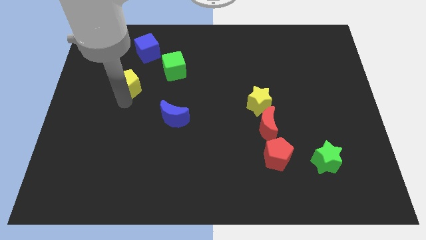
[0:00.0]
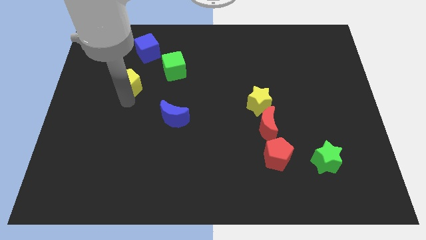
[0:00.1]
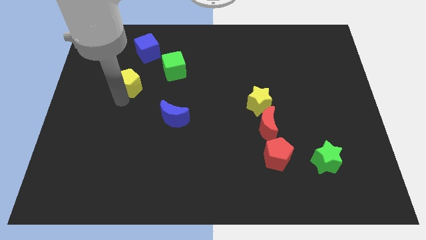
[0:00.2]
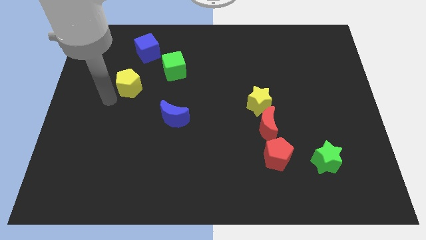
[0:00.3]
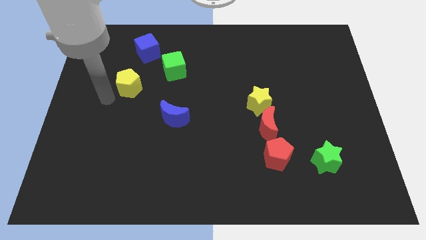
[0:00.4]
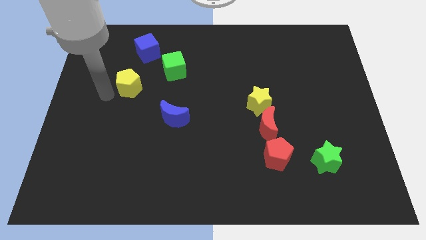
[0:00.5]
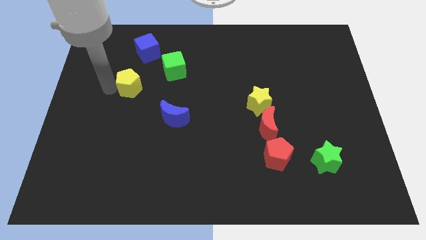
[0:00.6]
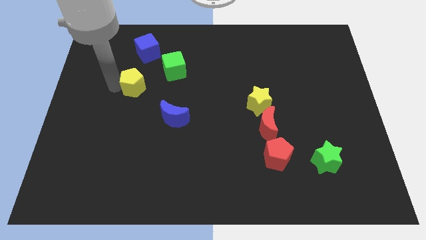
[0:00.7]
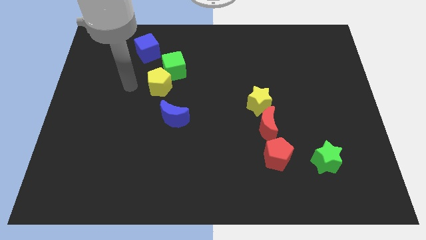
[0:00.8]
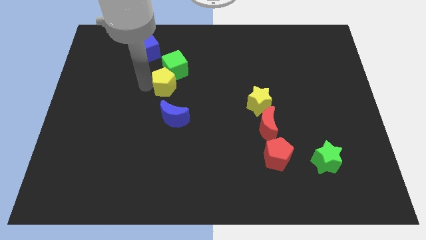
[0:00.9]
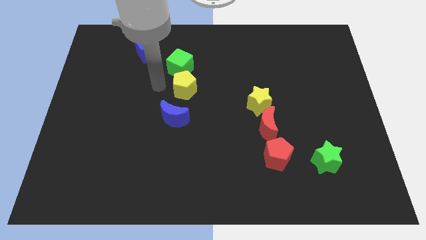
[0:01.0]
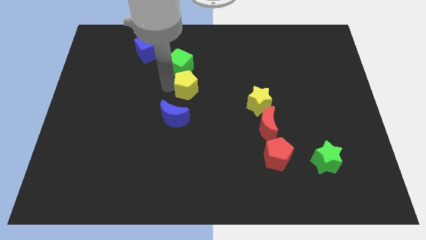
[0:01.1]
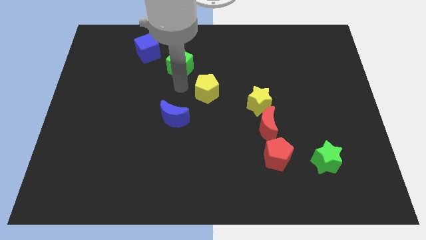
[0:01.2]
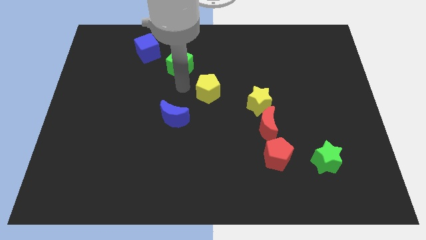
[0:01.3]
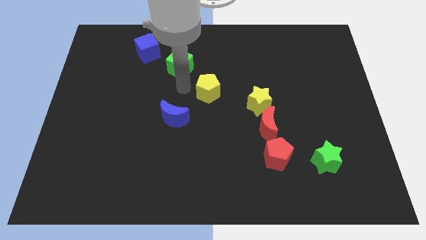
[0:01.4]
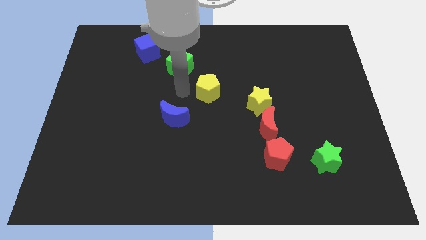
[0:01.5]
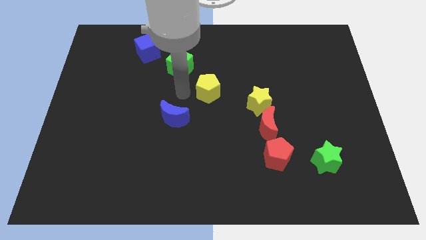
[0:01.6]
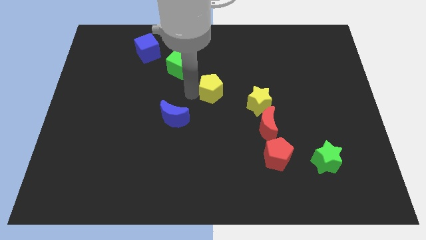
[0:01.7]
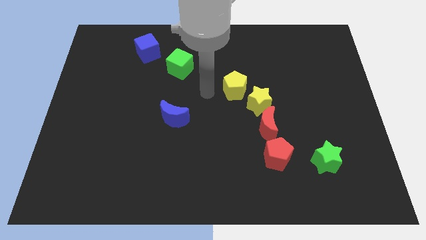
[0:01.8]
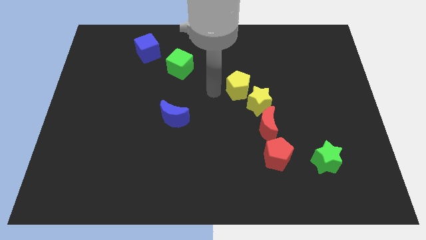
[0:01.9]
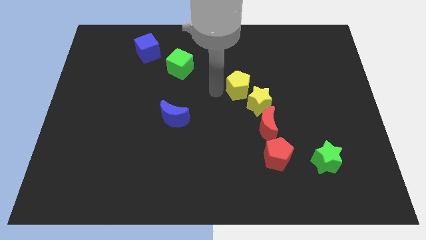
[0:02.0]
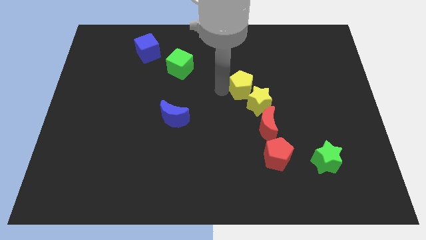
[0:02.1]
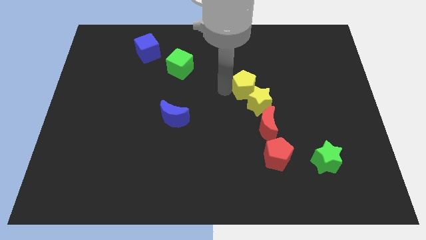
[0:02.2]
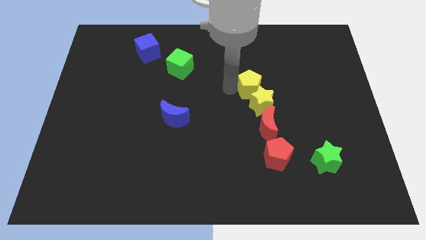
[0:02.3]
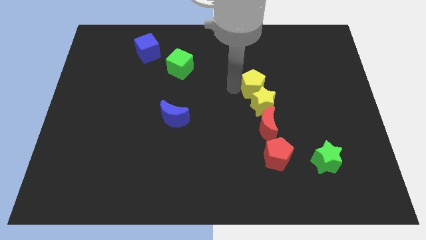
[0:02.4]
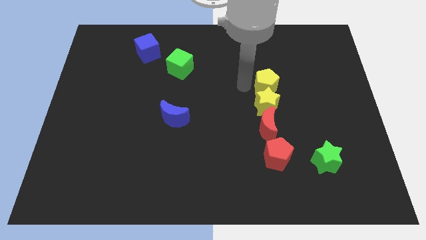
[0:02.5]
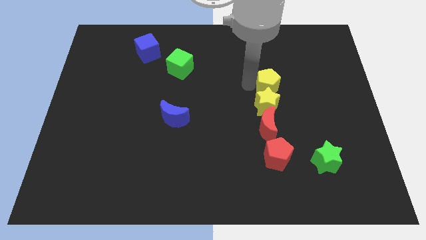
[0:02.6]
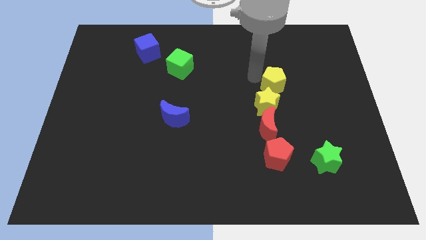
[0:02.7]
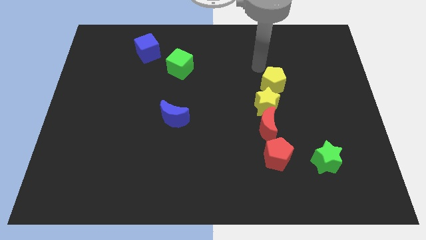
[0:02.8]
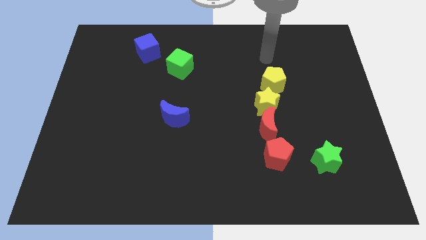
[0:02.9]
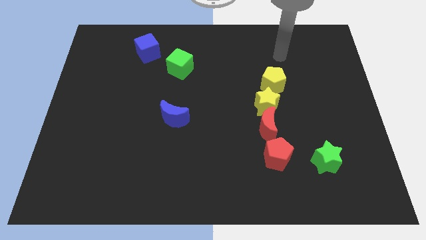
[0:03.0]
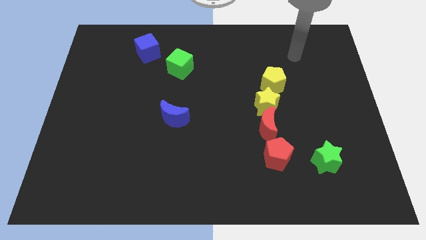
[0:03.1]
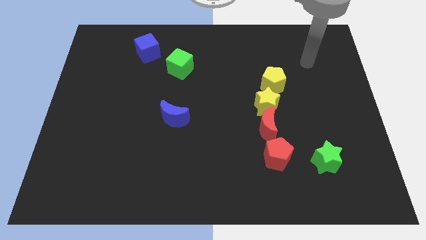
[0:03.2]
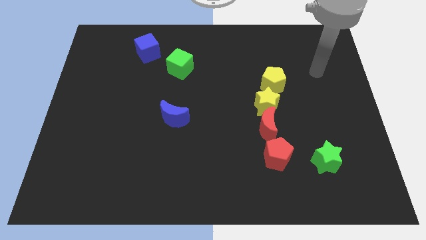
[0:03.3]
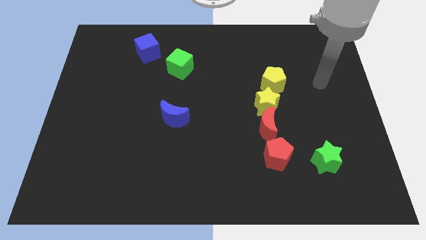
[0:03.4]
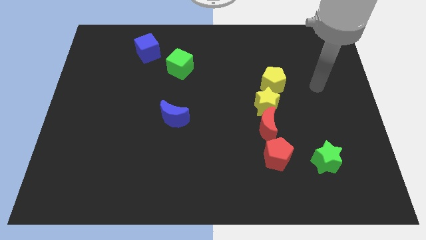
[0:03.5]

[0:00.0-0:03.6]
push the yellow pentagon into the yellow star

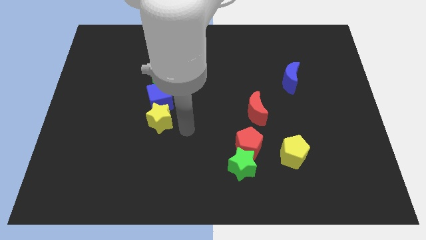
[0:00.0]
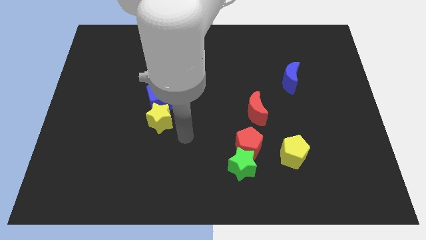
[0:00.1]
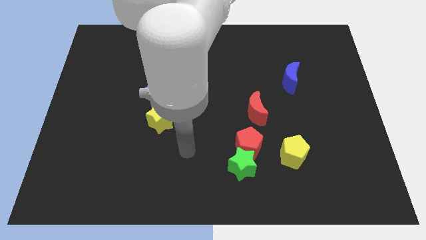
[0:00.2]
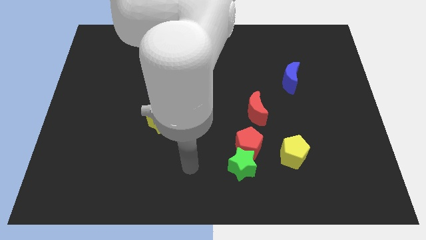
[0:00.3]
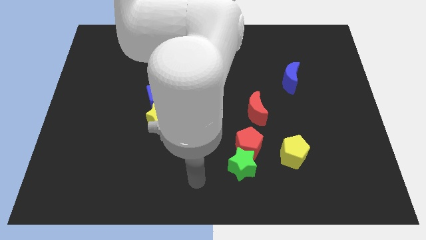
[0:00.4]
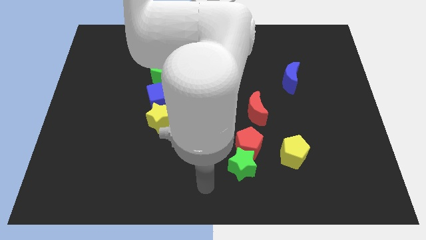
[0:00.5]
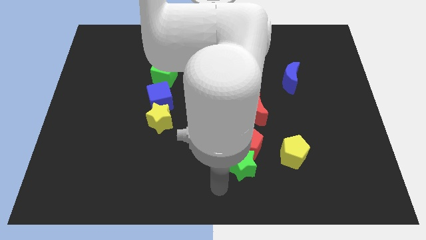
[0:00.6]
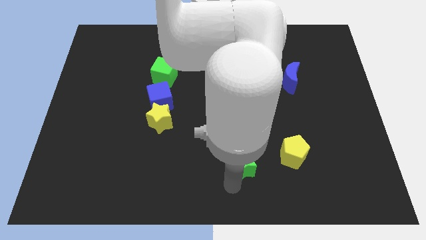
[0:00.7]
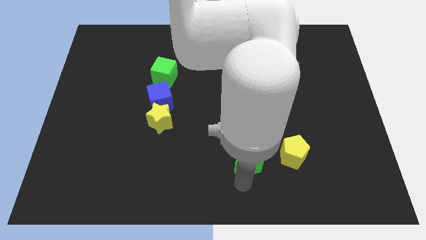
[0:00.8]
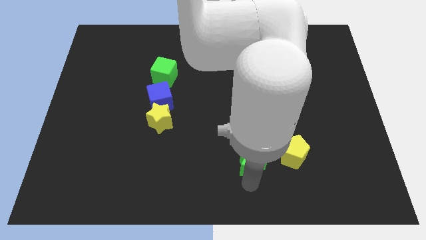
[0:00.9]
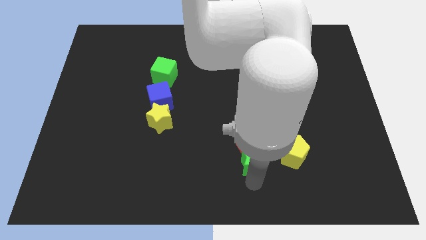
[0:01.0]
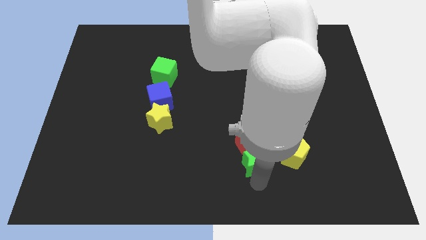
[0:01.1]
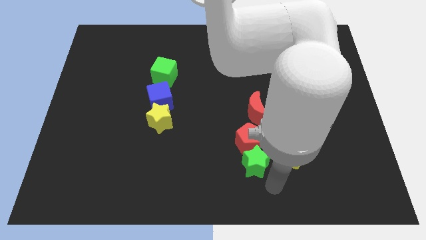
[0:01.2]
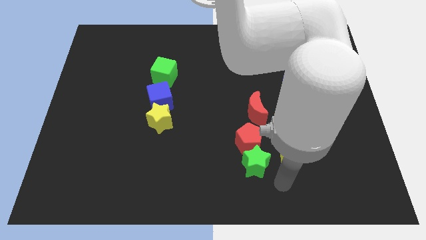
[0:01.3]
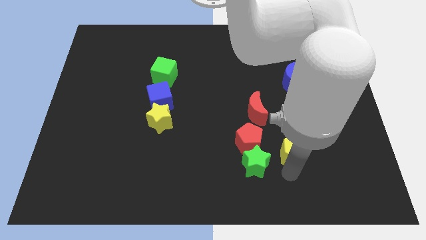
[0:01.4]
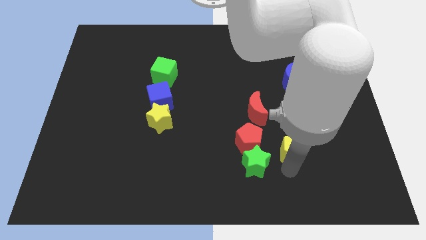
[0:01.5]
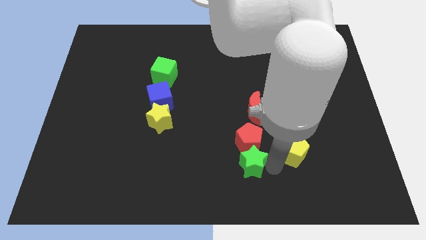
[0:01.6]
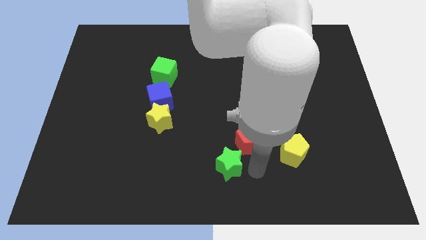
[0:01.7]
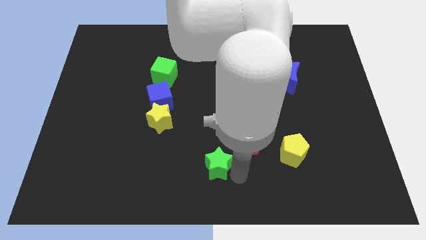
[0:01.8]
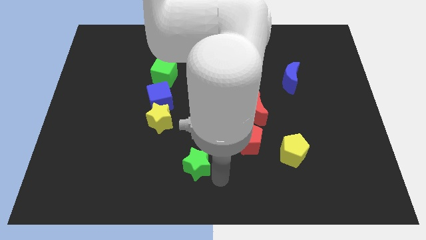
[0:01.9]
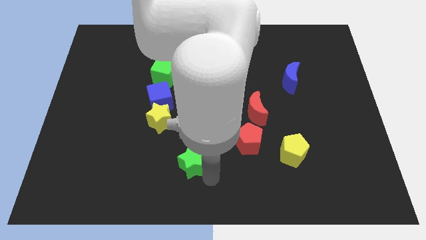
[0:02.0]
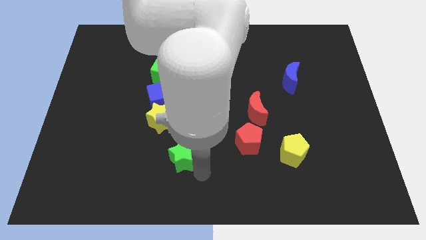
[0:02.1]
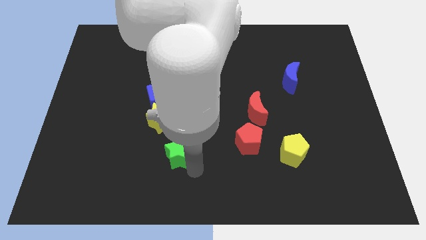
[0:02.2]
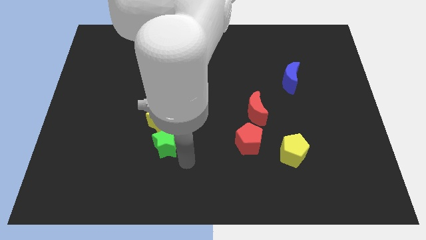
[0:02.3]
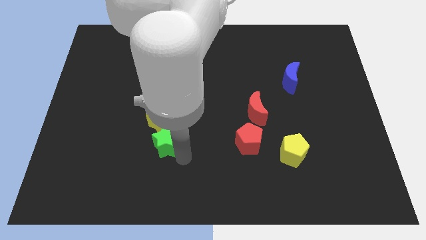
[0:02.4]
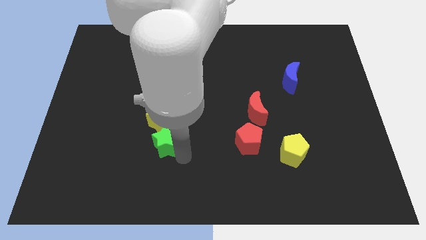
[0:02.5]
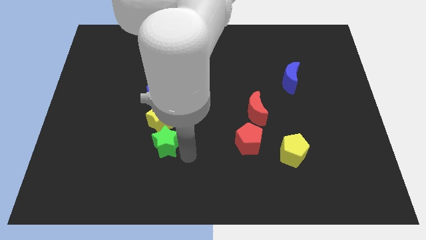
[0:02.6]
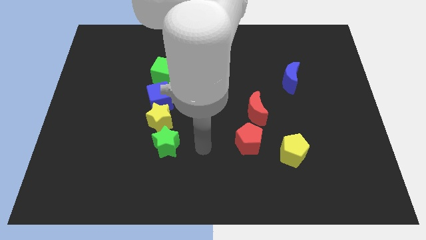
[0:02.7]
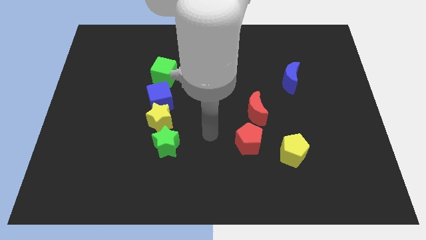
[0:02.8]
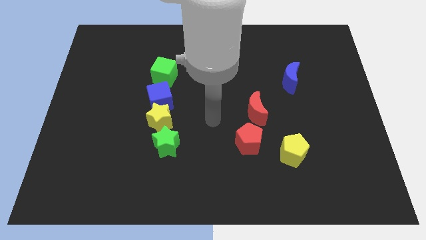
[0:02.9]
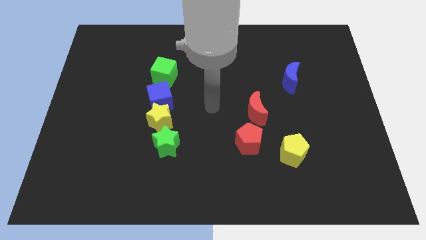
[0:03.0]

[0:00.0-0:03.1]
move green star below yellow star

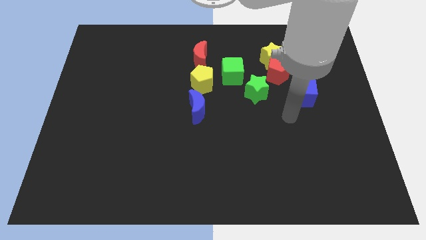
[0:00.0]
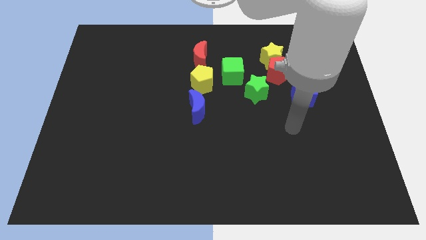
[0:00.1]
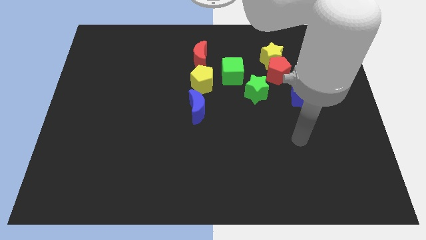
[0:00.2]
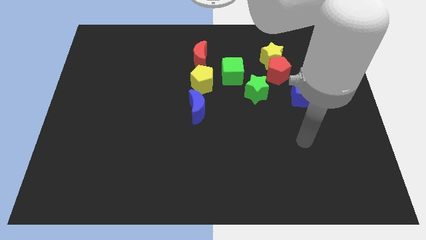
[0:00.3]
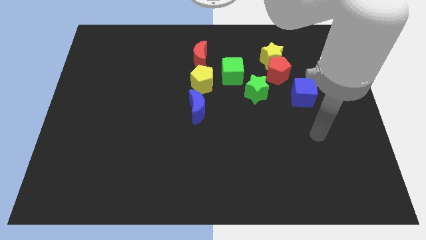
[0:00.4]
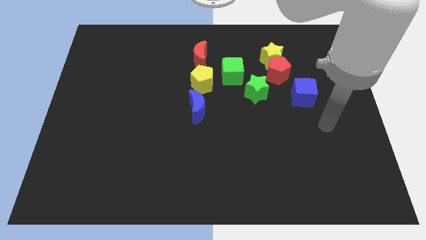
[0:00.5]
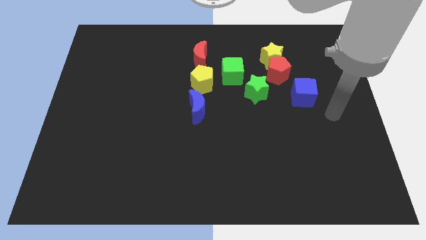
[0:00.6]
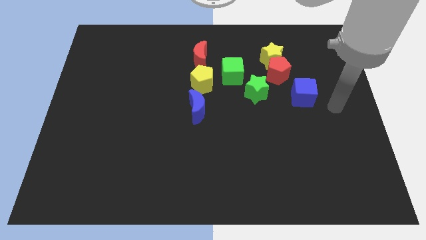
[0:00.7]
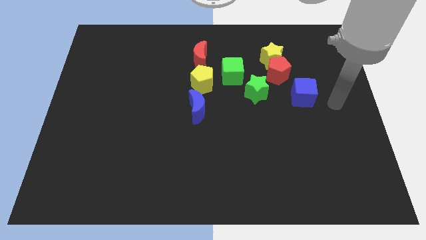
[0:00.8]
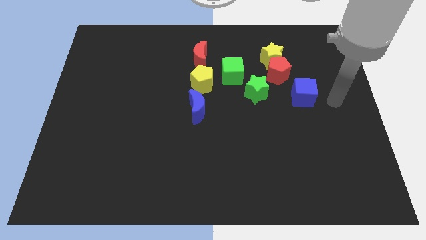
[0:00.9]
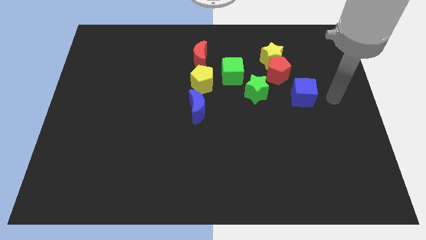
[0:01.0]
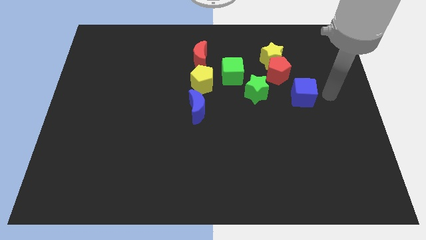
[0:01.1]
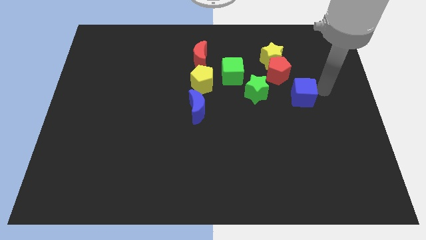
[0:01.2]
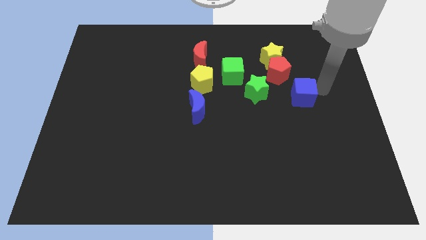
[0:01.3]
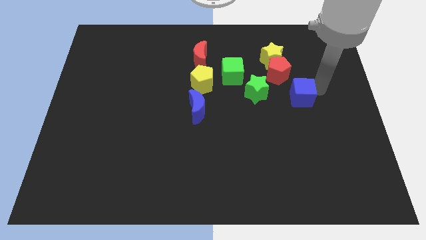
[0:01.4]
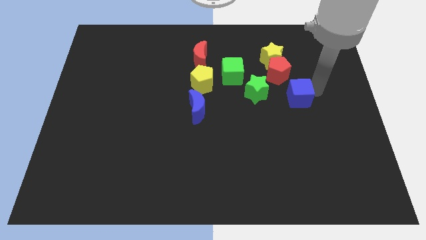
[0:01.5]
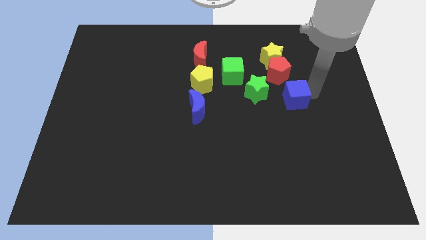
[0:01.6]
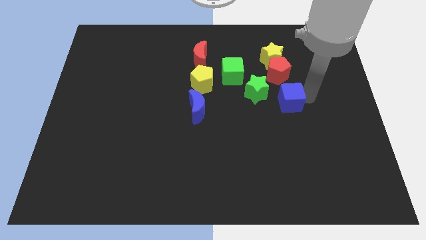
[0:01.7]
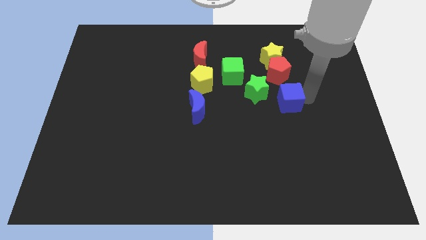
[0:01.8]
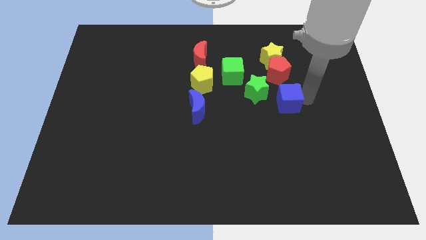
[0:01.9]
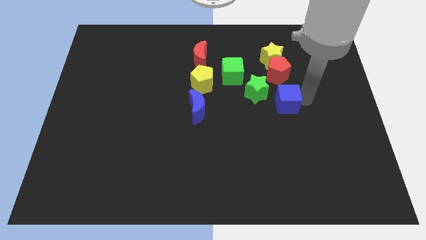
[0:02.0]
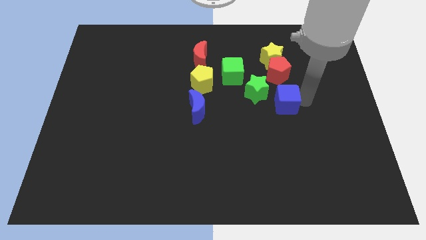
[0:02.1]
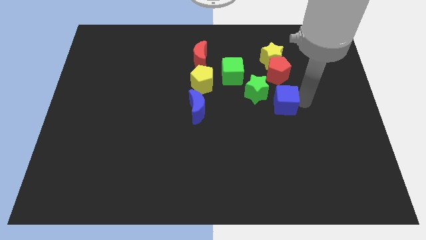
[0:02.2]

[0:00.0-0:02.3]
place blue block bottom of green star

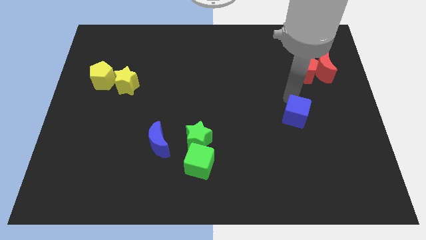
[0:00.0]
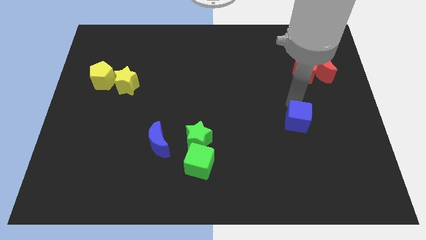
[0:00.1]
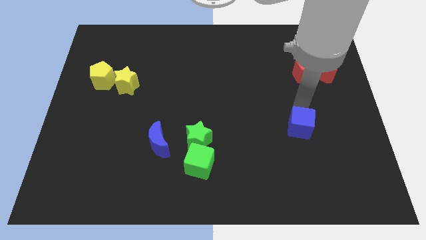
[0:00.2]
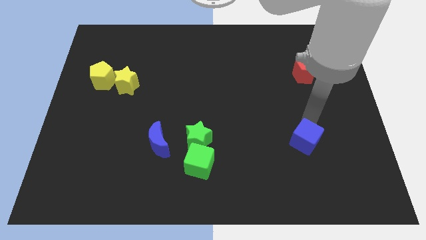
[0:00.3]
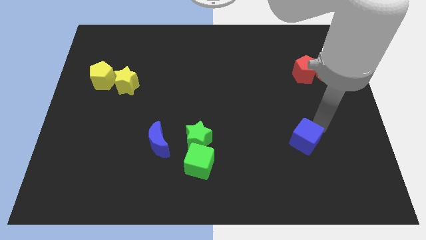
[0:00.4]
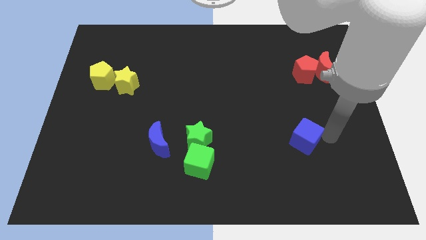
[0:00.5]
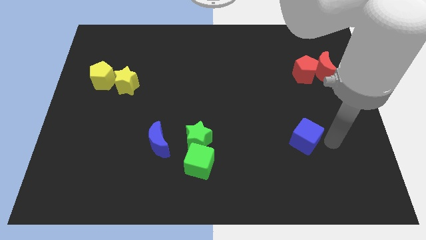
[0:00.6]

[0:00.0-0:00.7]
slightly push the blue cube towards bottom of the board
